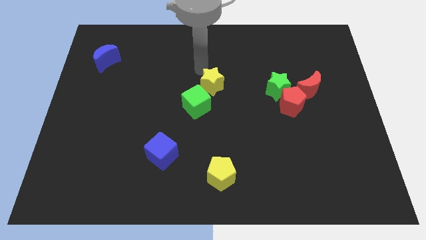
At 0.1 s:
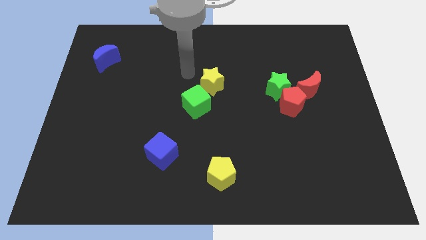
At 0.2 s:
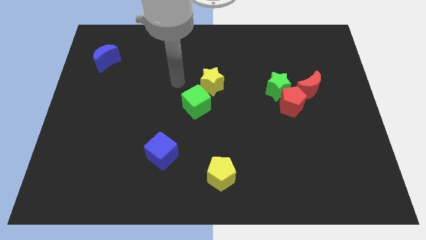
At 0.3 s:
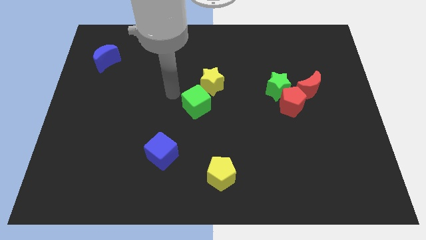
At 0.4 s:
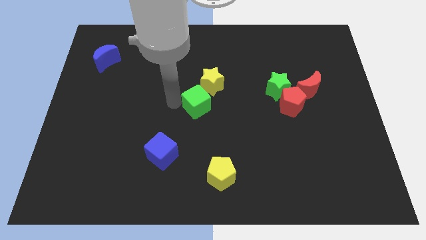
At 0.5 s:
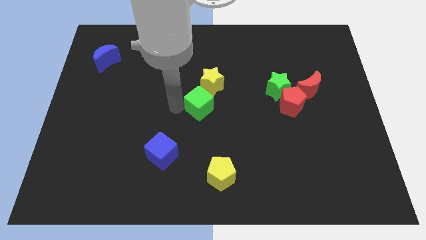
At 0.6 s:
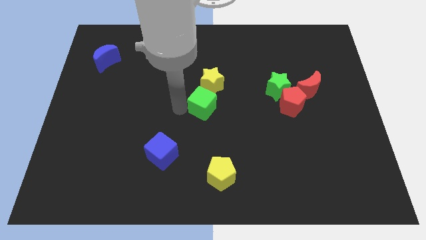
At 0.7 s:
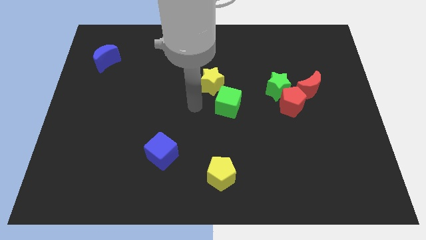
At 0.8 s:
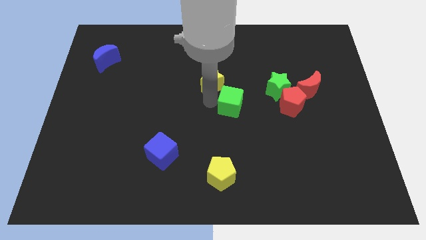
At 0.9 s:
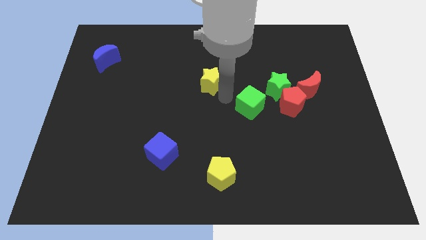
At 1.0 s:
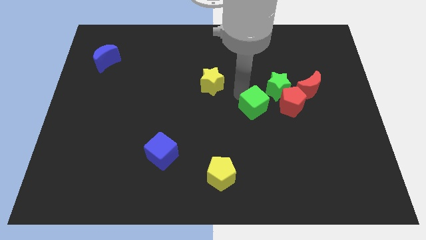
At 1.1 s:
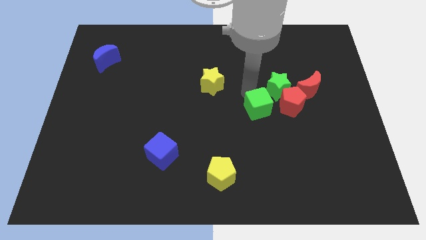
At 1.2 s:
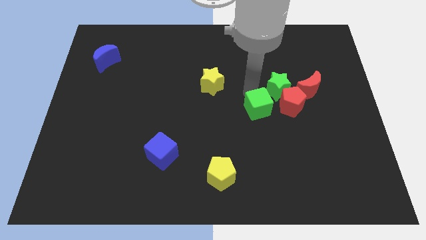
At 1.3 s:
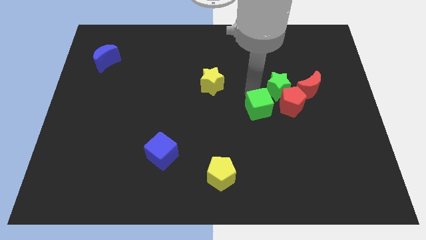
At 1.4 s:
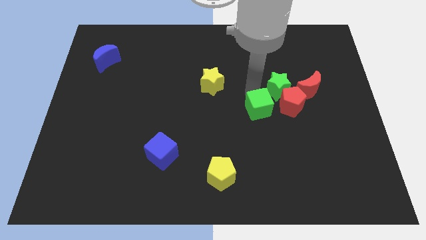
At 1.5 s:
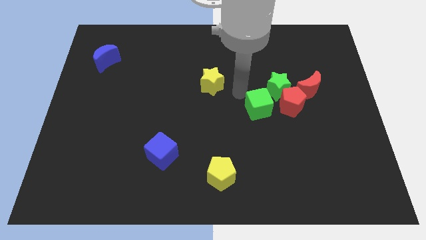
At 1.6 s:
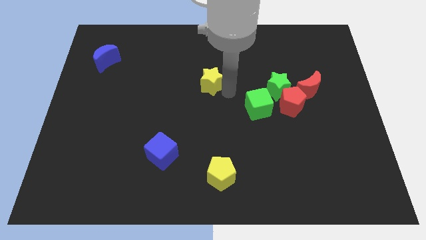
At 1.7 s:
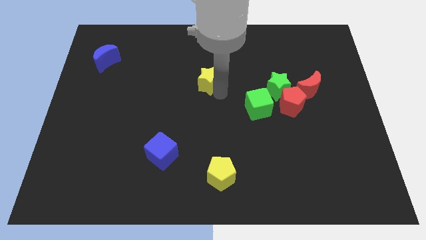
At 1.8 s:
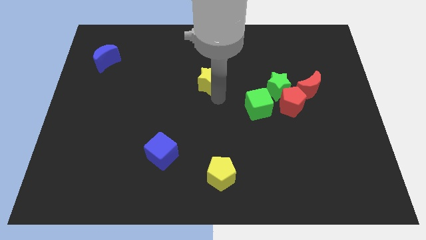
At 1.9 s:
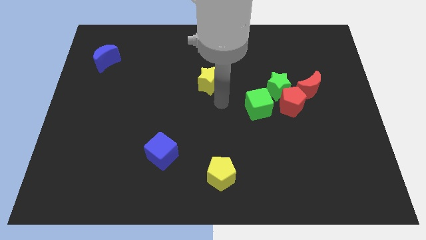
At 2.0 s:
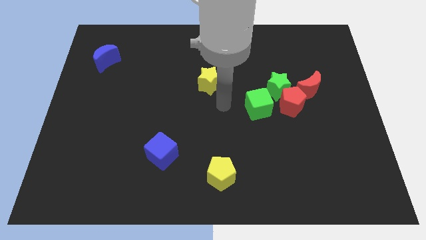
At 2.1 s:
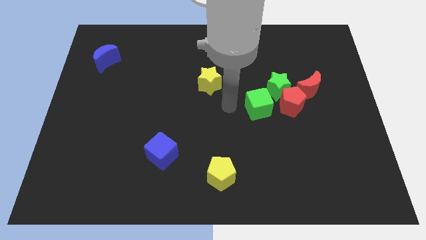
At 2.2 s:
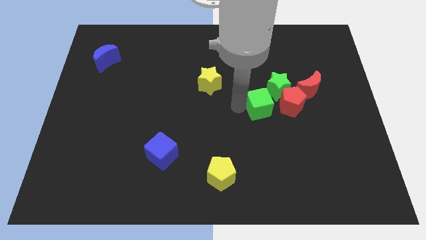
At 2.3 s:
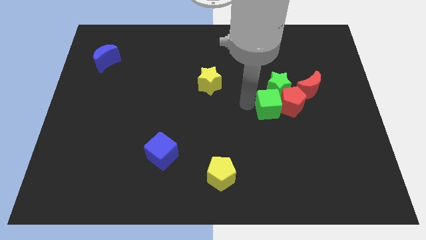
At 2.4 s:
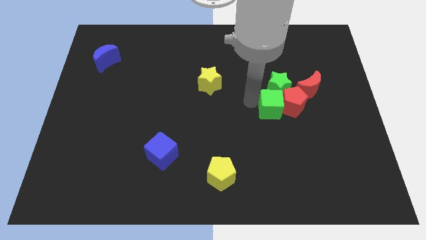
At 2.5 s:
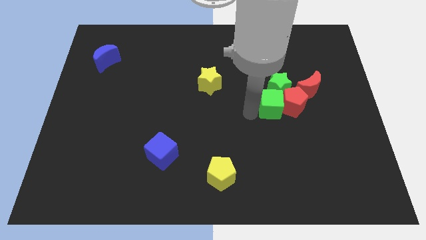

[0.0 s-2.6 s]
place the green cube into the red pentagon and green star

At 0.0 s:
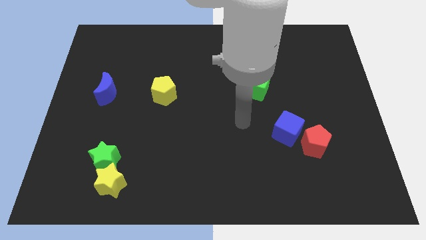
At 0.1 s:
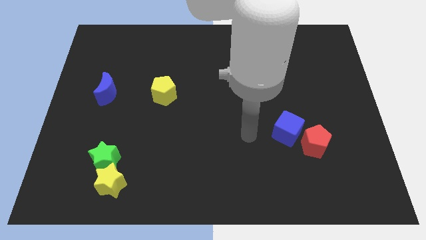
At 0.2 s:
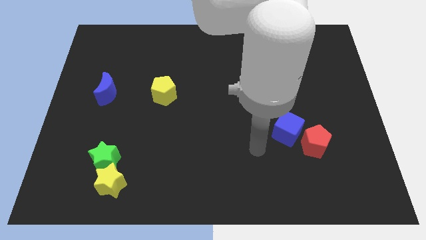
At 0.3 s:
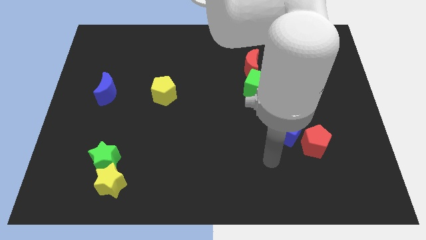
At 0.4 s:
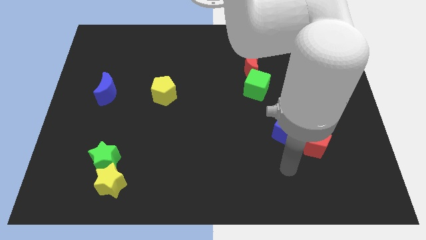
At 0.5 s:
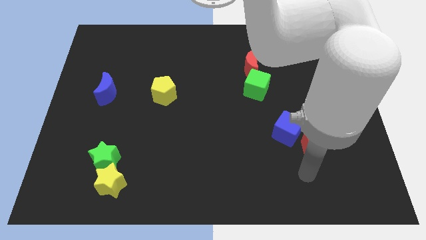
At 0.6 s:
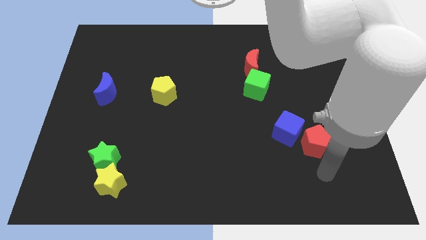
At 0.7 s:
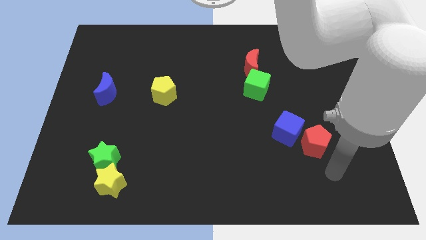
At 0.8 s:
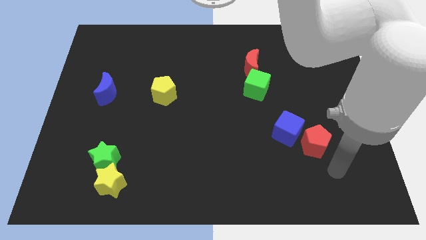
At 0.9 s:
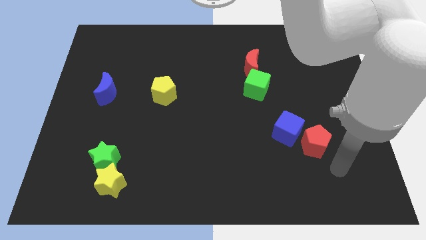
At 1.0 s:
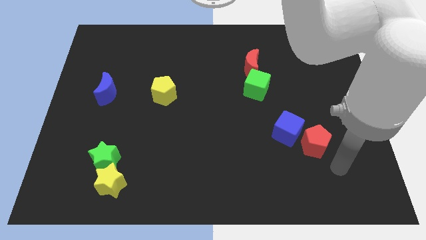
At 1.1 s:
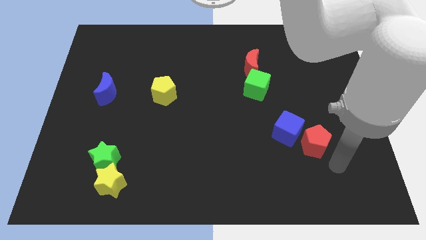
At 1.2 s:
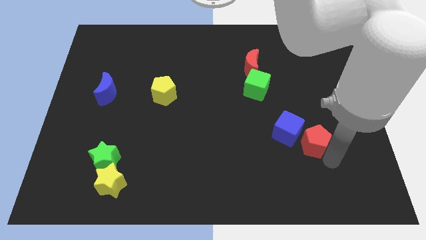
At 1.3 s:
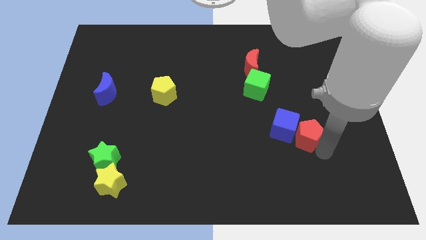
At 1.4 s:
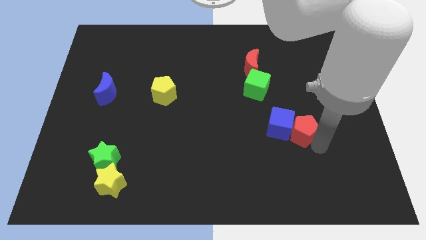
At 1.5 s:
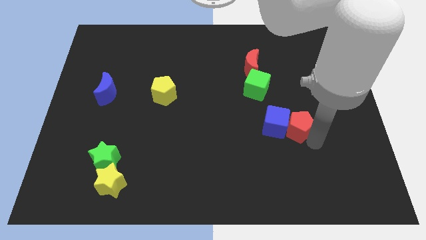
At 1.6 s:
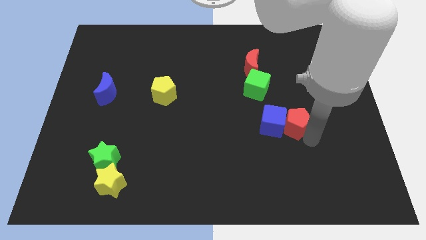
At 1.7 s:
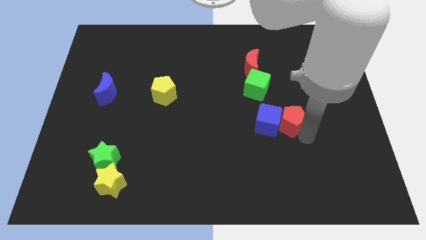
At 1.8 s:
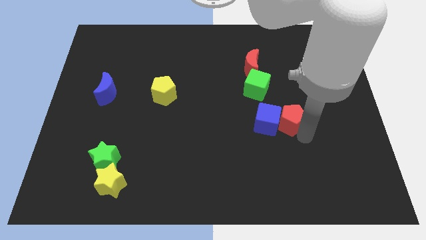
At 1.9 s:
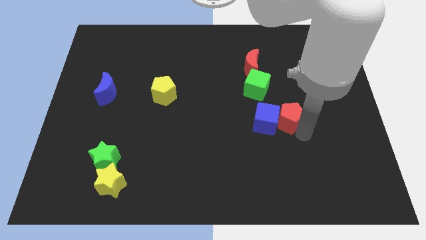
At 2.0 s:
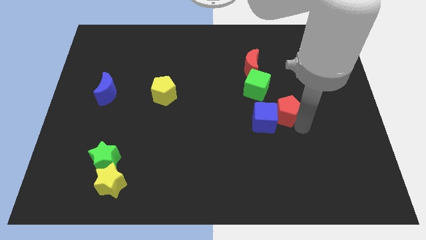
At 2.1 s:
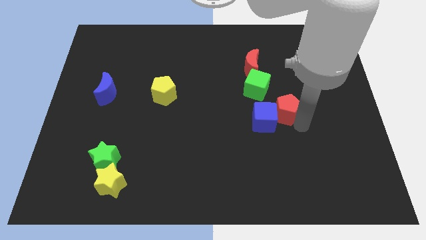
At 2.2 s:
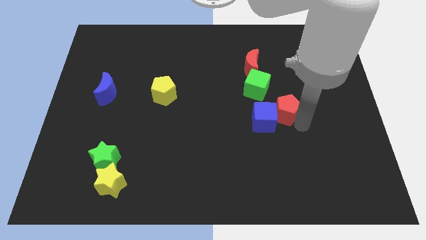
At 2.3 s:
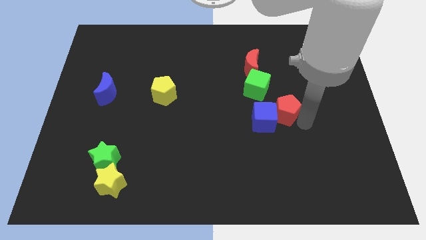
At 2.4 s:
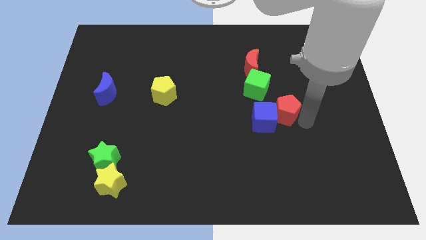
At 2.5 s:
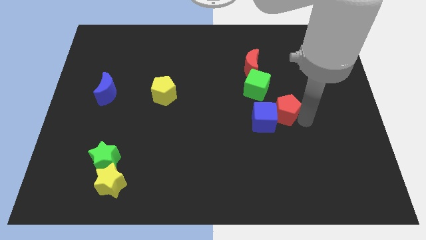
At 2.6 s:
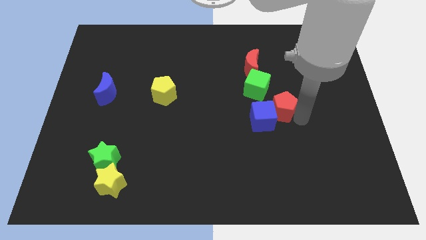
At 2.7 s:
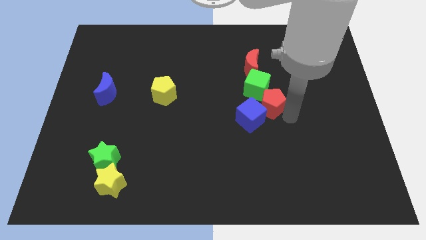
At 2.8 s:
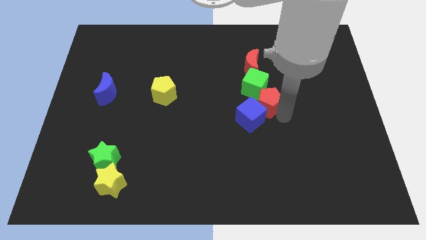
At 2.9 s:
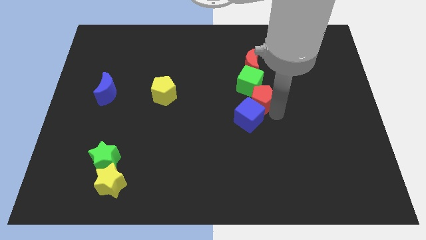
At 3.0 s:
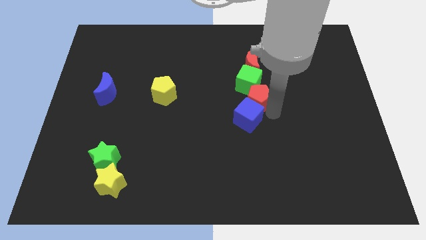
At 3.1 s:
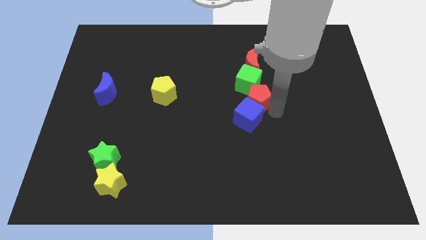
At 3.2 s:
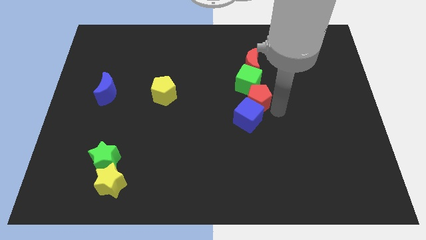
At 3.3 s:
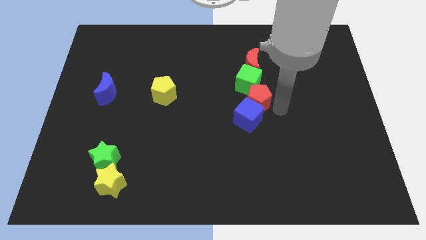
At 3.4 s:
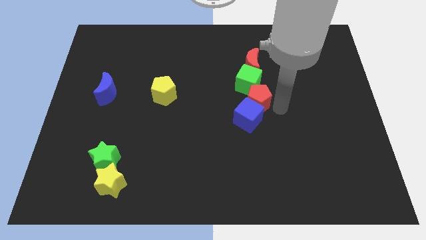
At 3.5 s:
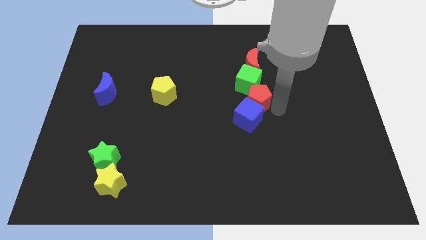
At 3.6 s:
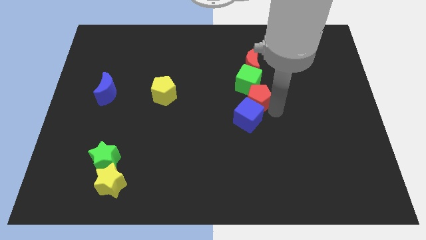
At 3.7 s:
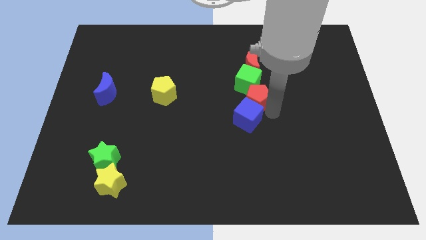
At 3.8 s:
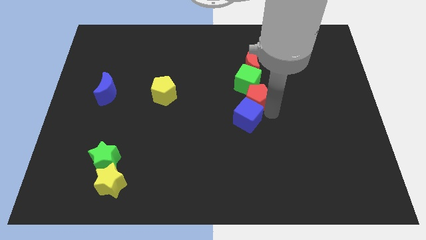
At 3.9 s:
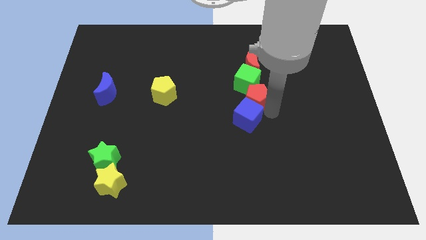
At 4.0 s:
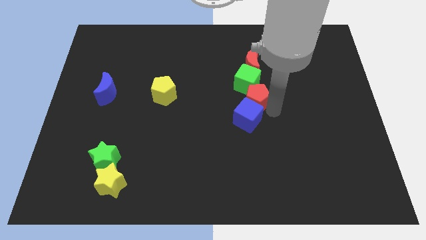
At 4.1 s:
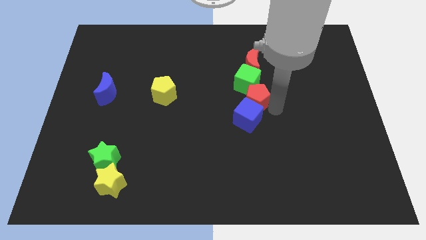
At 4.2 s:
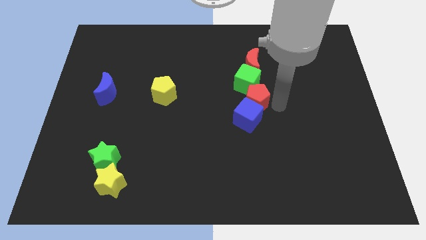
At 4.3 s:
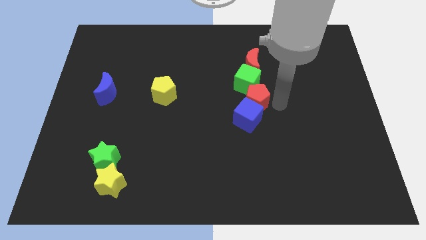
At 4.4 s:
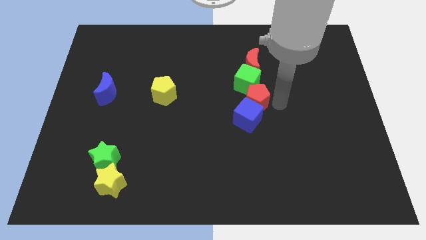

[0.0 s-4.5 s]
push the red pentagon and the blue cube to the bottom of the green cube

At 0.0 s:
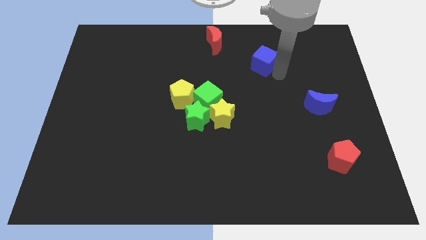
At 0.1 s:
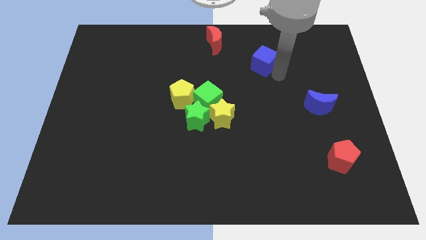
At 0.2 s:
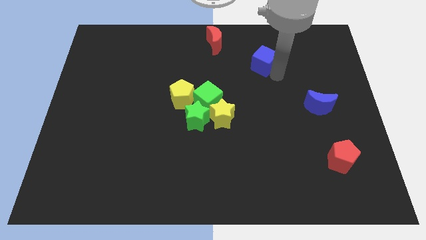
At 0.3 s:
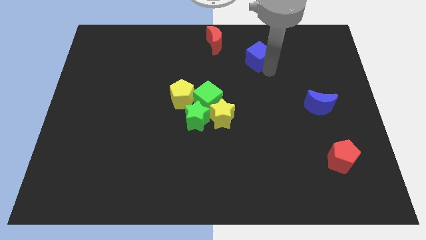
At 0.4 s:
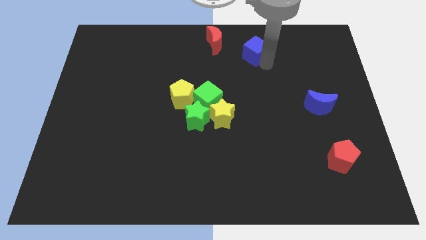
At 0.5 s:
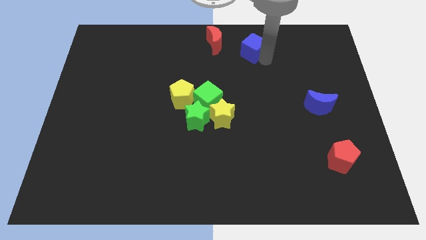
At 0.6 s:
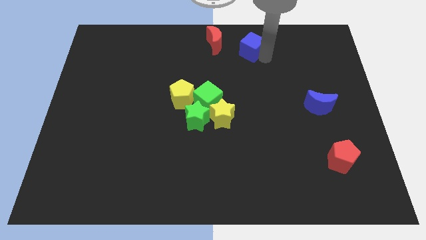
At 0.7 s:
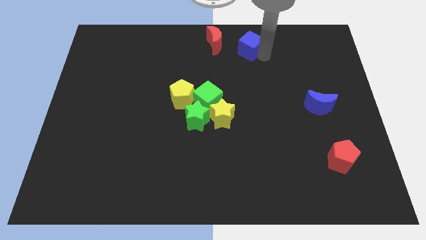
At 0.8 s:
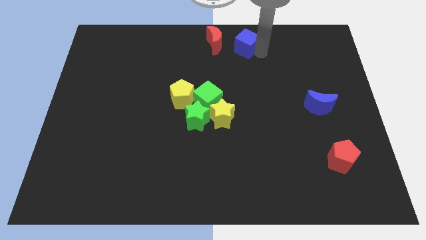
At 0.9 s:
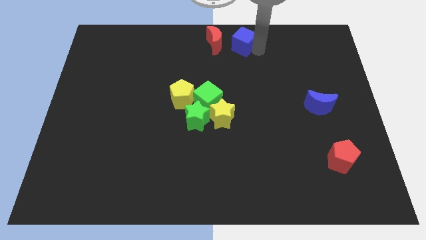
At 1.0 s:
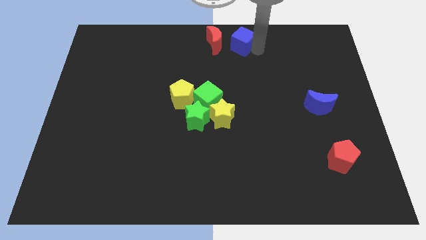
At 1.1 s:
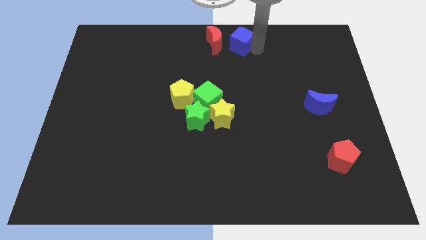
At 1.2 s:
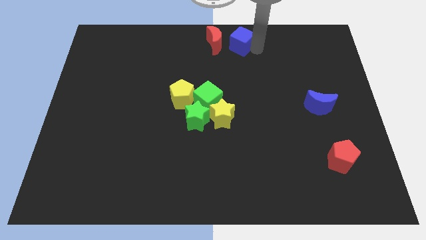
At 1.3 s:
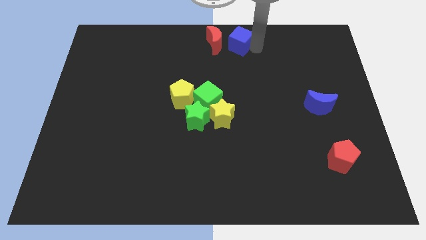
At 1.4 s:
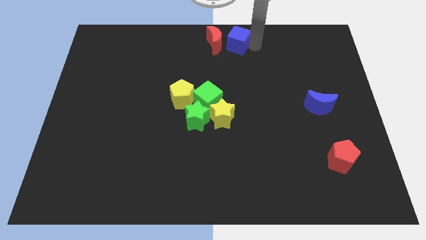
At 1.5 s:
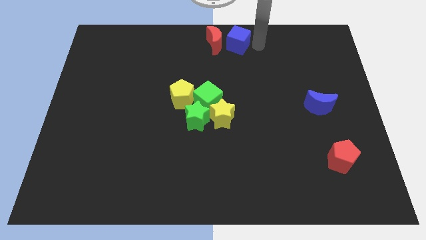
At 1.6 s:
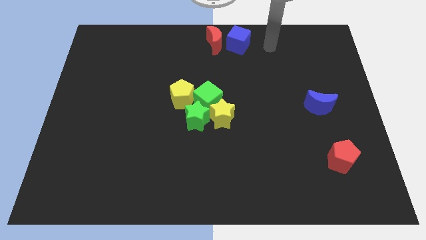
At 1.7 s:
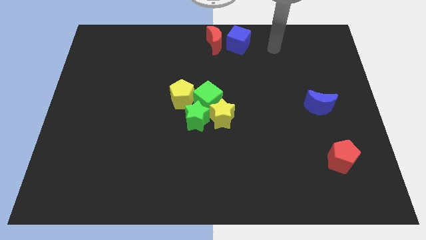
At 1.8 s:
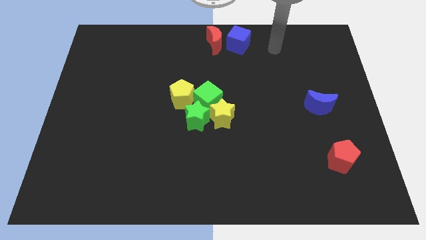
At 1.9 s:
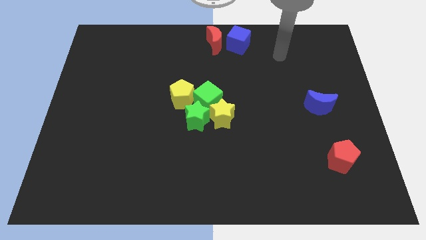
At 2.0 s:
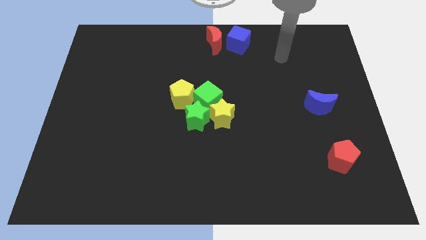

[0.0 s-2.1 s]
push the blue cube to the right side of th red crescent
